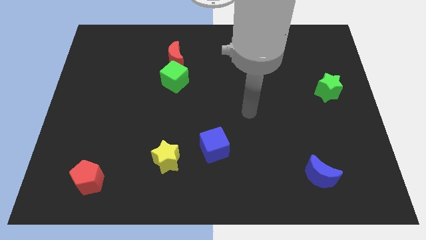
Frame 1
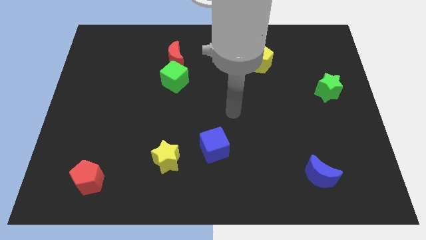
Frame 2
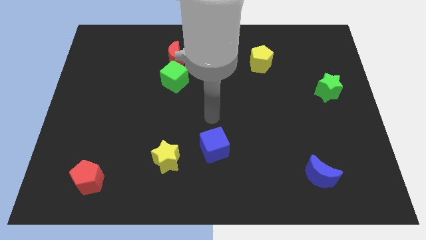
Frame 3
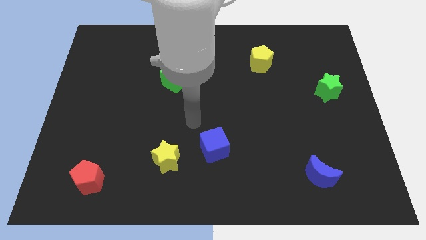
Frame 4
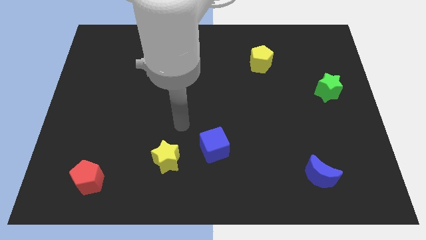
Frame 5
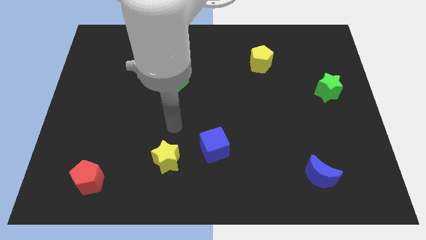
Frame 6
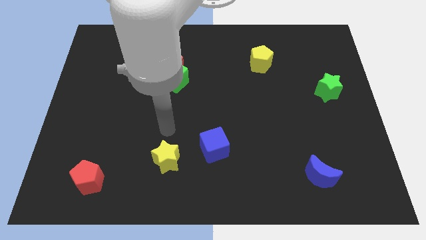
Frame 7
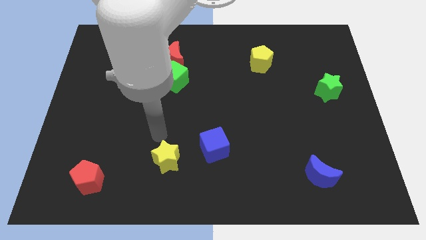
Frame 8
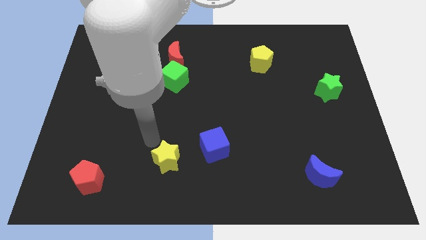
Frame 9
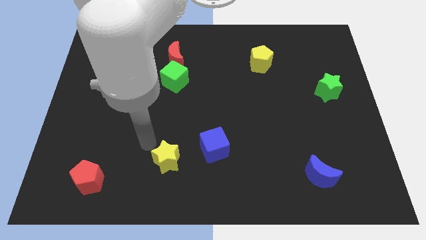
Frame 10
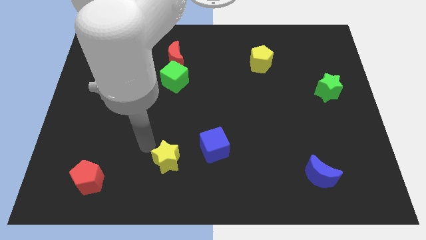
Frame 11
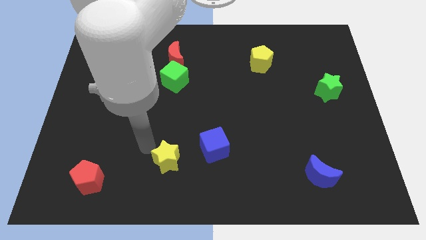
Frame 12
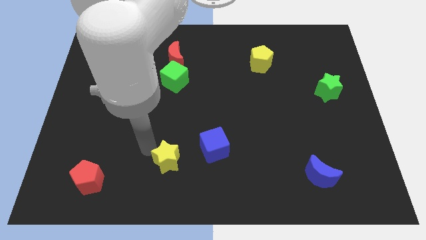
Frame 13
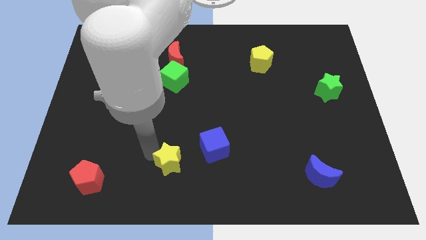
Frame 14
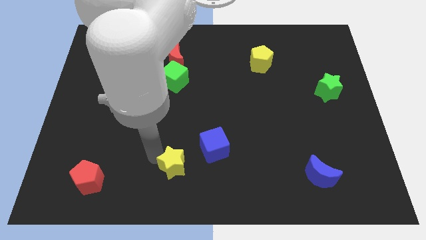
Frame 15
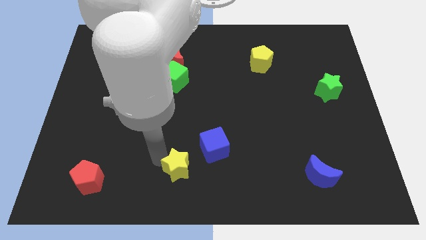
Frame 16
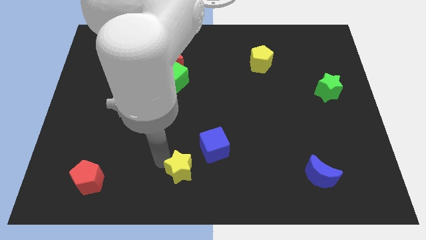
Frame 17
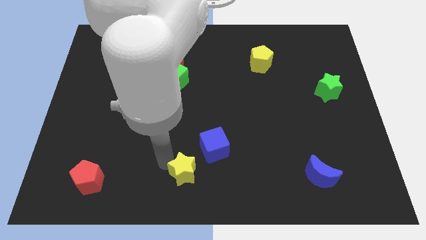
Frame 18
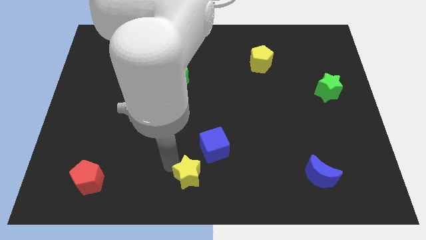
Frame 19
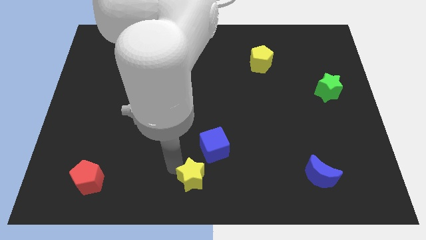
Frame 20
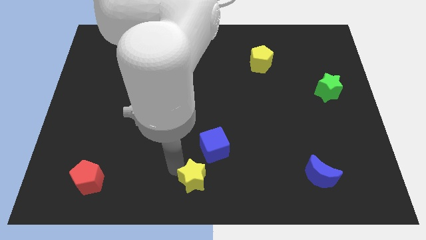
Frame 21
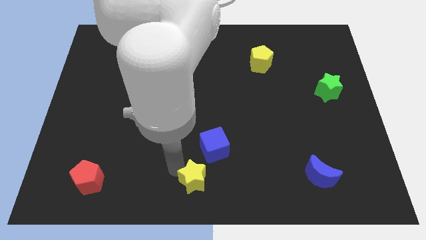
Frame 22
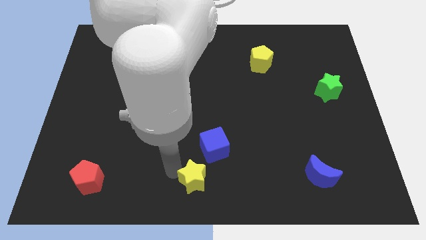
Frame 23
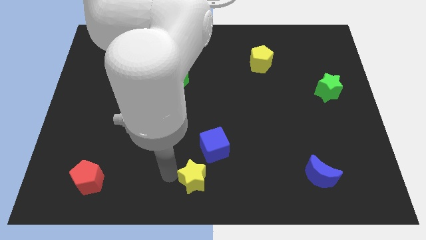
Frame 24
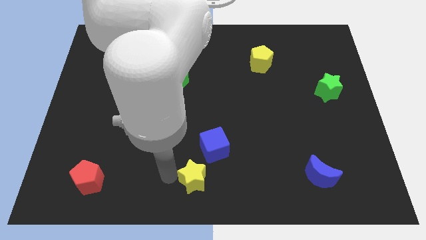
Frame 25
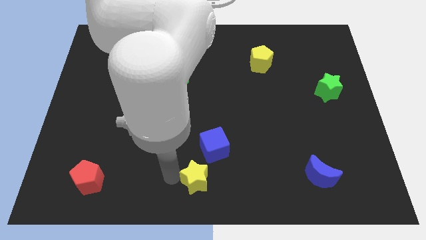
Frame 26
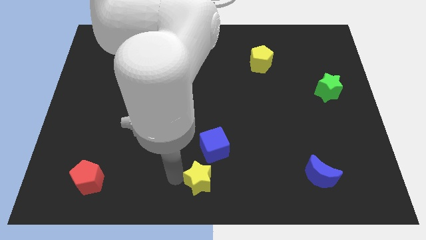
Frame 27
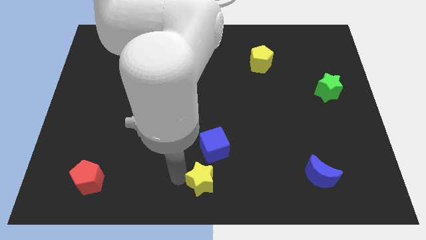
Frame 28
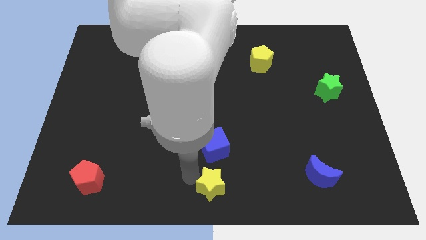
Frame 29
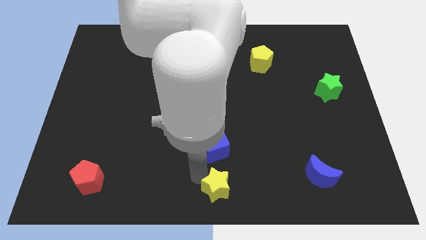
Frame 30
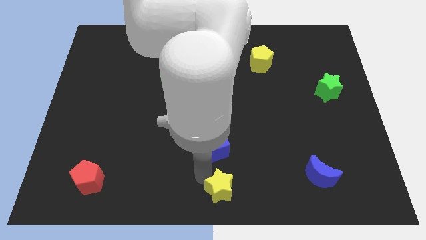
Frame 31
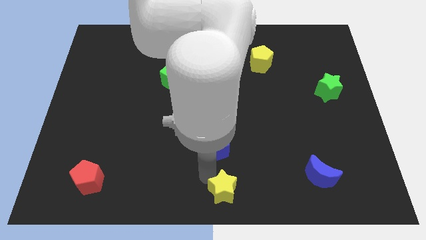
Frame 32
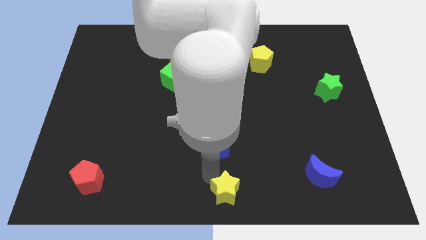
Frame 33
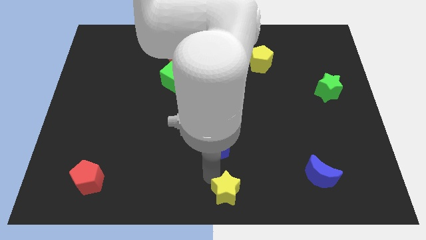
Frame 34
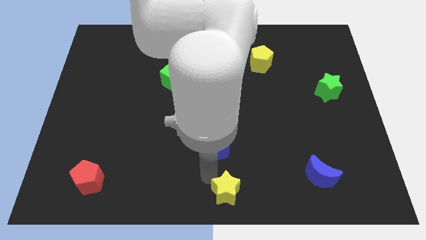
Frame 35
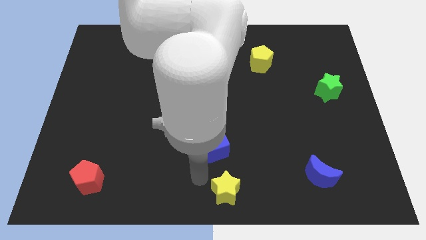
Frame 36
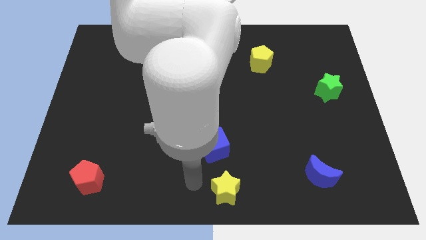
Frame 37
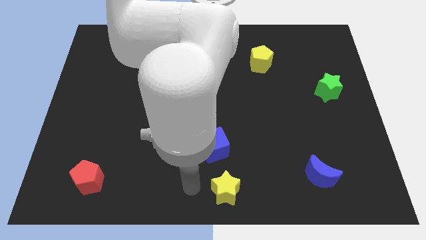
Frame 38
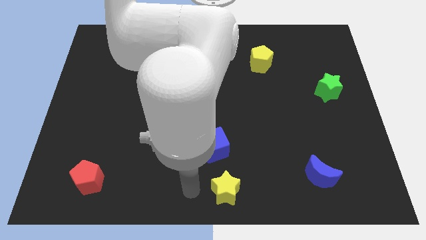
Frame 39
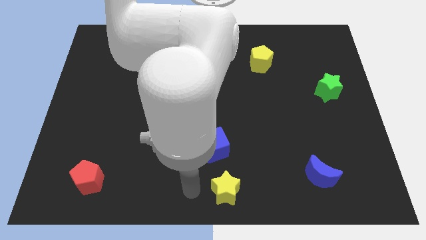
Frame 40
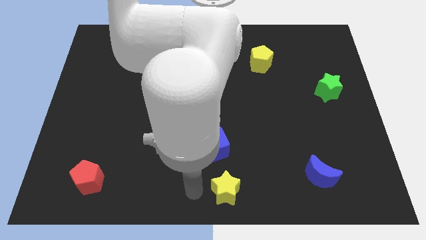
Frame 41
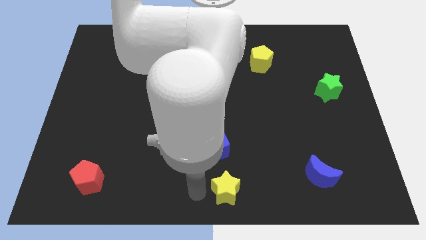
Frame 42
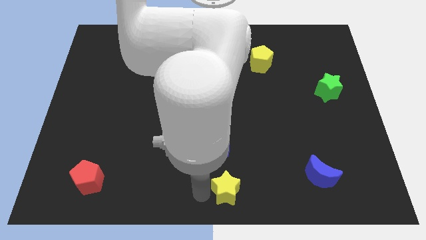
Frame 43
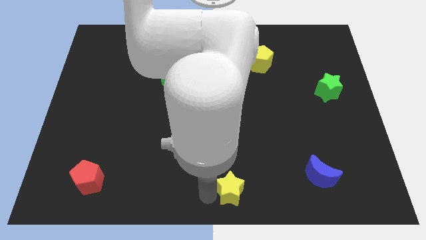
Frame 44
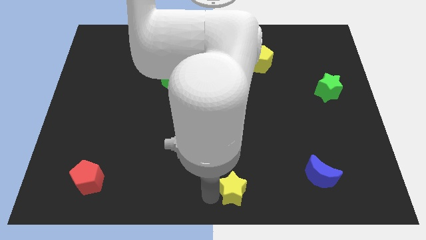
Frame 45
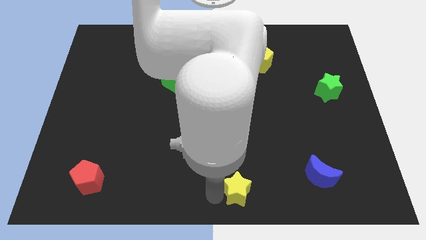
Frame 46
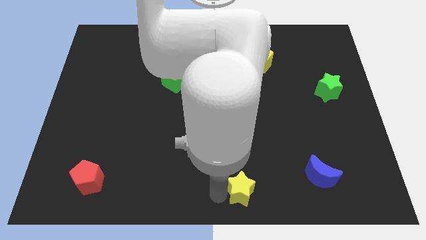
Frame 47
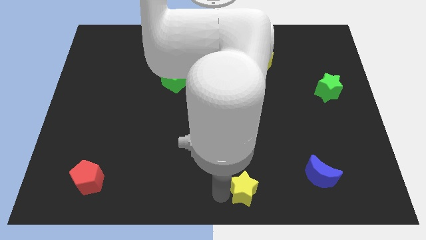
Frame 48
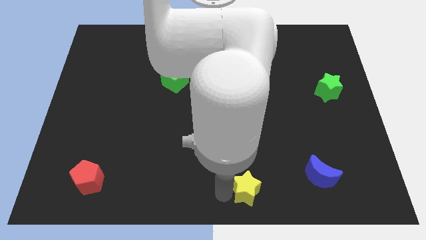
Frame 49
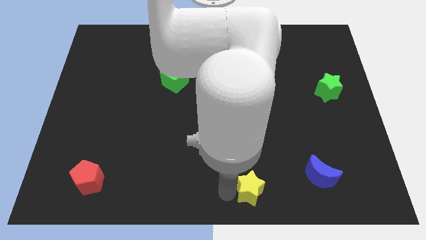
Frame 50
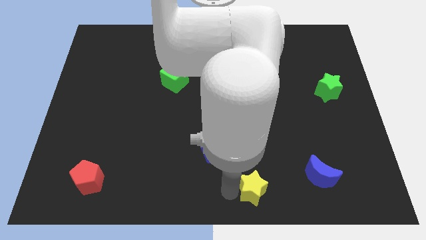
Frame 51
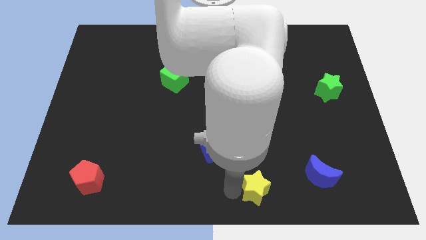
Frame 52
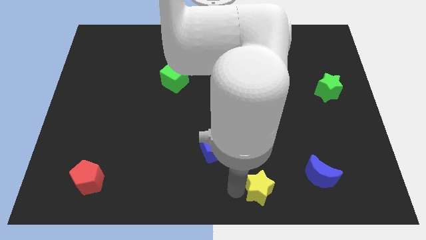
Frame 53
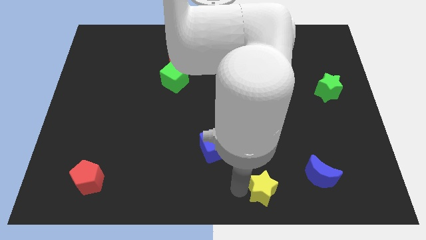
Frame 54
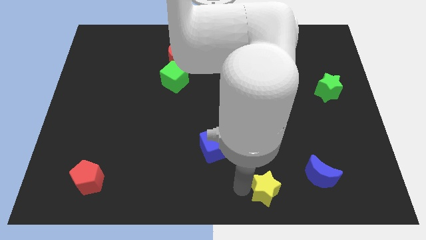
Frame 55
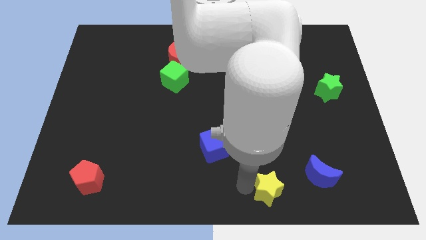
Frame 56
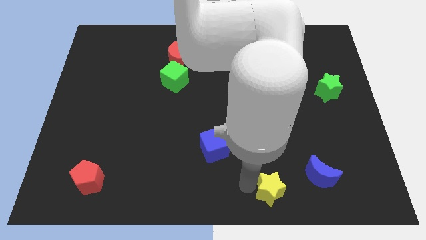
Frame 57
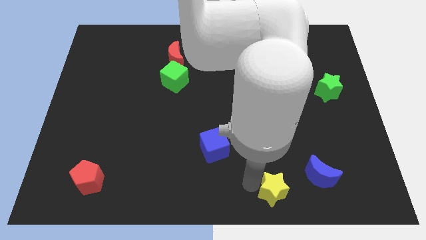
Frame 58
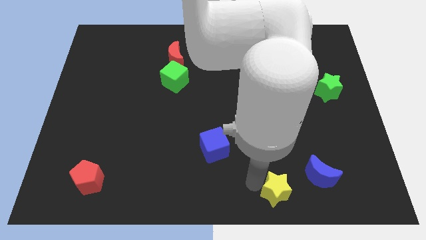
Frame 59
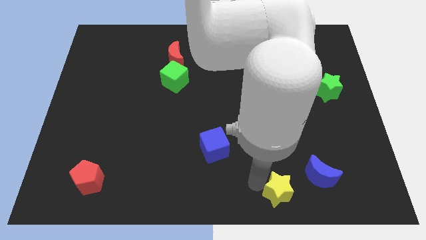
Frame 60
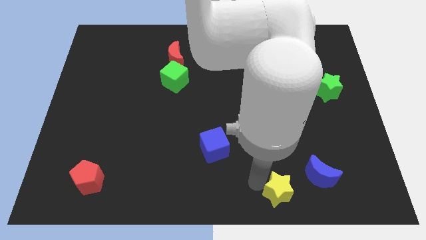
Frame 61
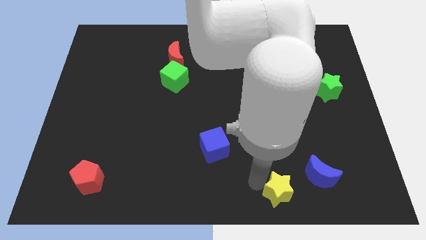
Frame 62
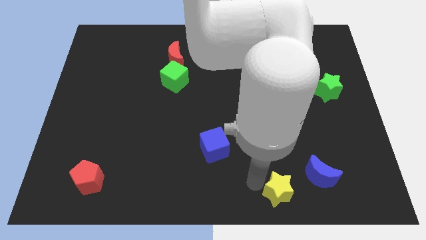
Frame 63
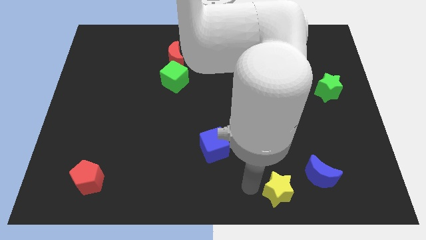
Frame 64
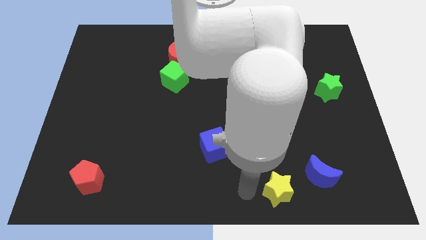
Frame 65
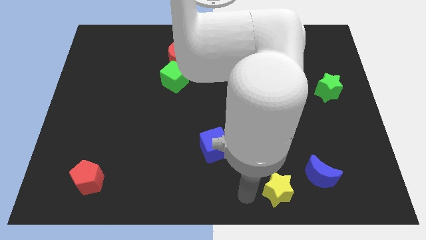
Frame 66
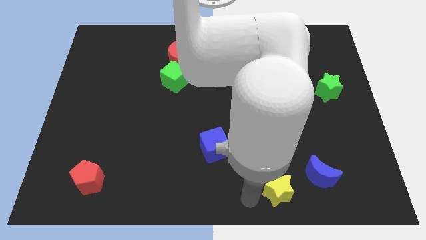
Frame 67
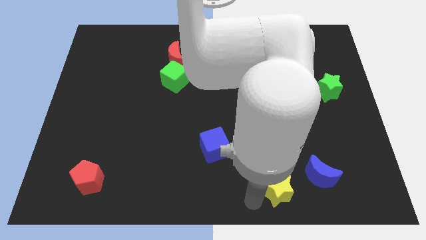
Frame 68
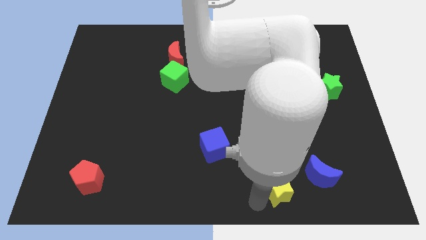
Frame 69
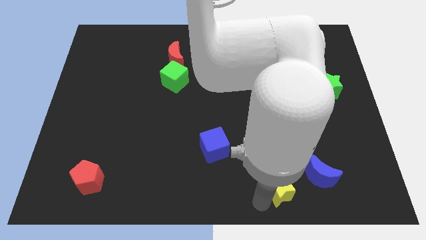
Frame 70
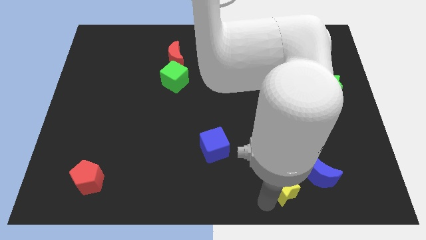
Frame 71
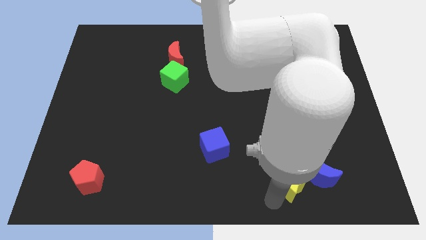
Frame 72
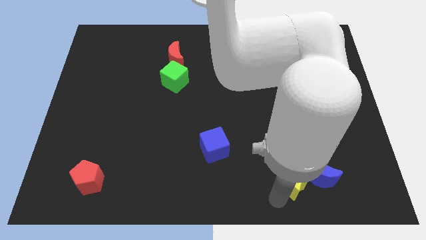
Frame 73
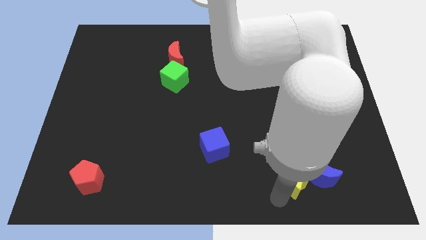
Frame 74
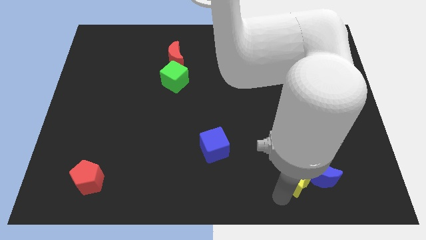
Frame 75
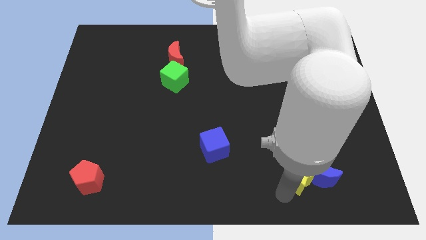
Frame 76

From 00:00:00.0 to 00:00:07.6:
put the yellow star close to the blue moon

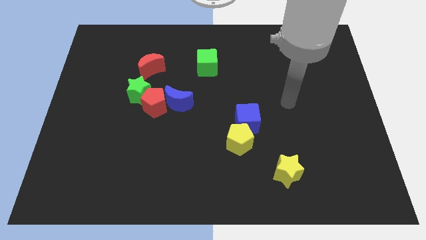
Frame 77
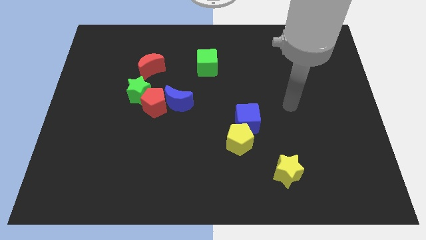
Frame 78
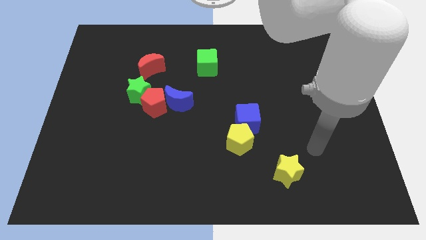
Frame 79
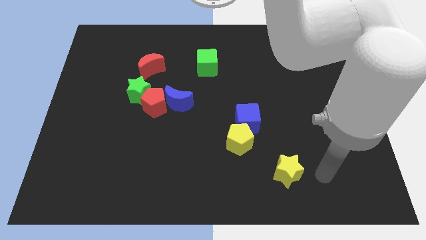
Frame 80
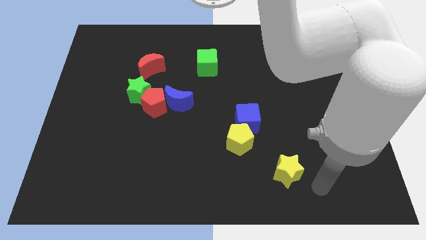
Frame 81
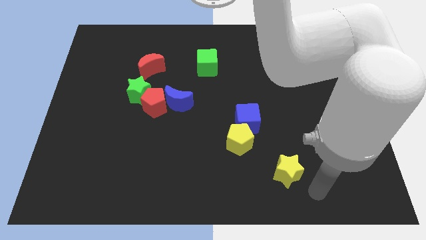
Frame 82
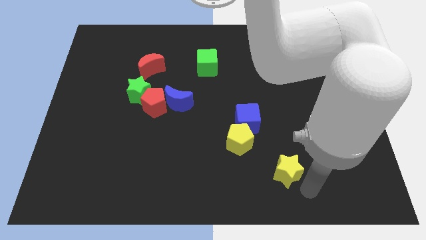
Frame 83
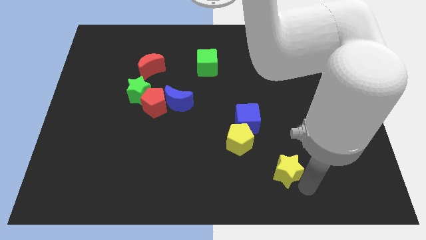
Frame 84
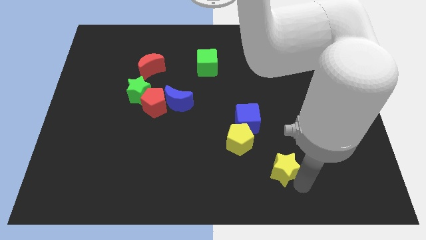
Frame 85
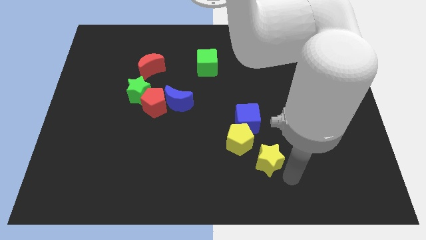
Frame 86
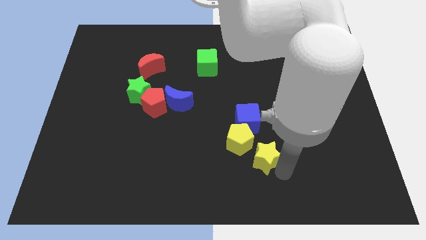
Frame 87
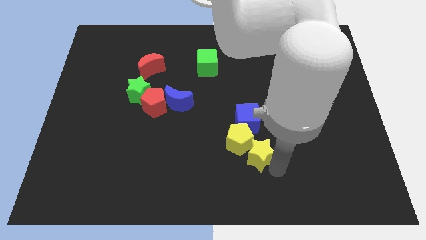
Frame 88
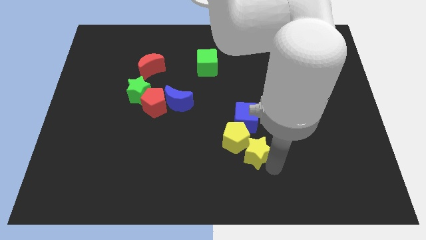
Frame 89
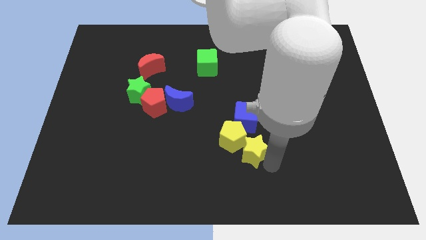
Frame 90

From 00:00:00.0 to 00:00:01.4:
slide the yellow star towards the yellow pentagon
